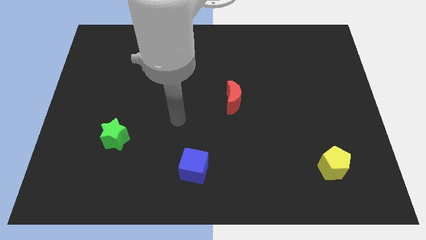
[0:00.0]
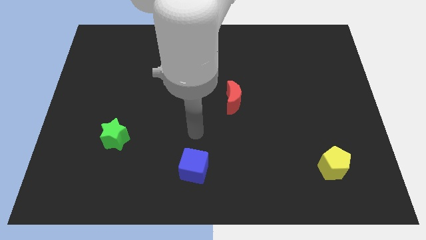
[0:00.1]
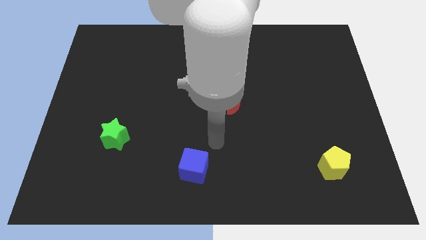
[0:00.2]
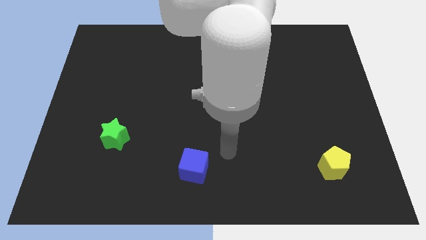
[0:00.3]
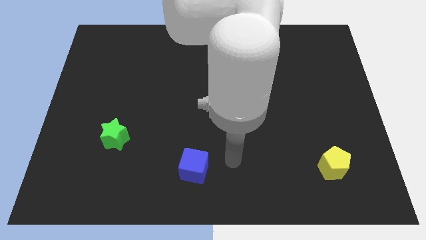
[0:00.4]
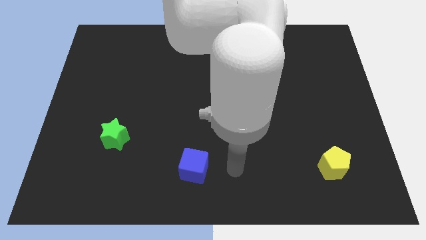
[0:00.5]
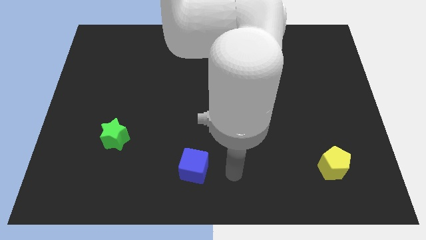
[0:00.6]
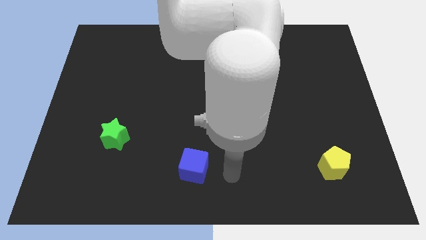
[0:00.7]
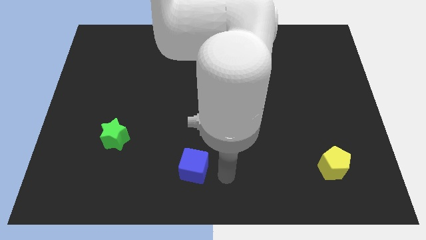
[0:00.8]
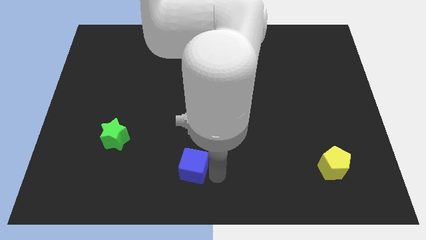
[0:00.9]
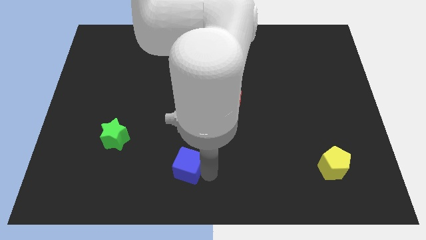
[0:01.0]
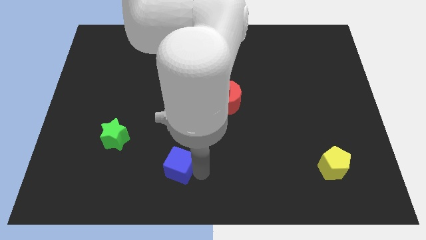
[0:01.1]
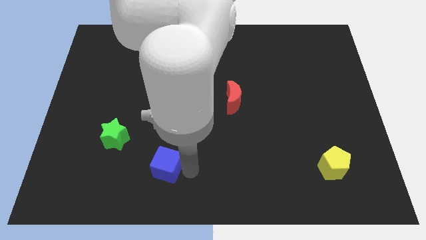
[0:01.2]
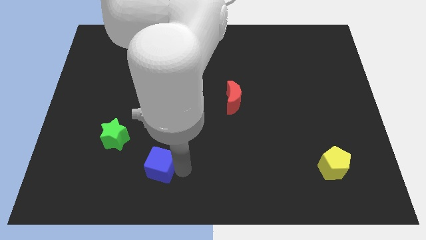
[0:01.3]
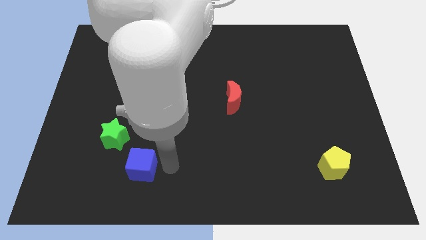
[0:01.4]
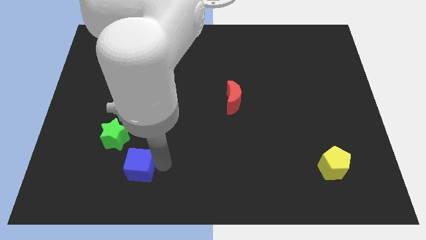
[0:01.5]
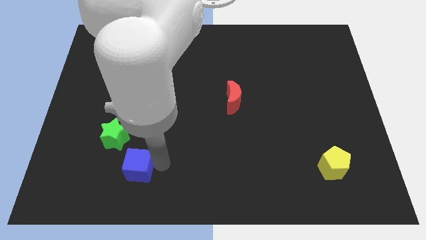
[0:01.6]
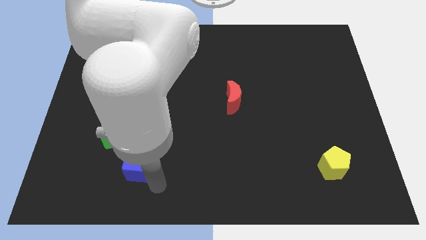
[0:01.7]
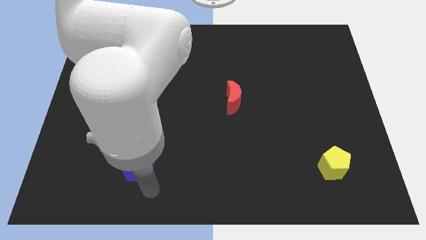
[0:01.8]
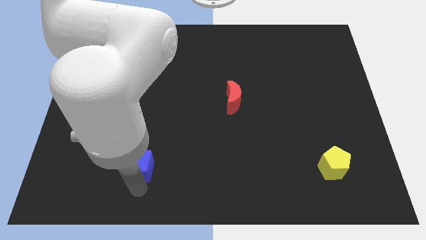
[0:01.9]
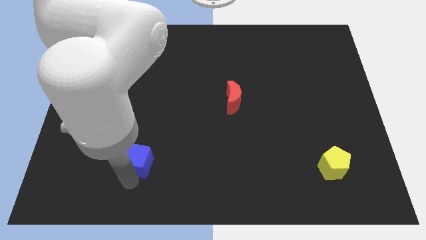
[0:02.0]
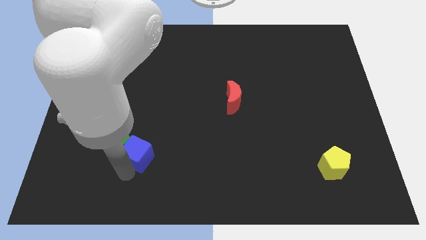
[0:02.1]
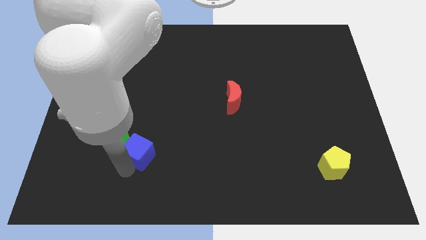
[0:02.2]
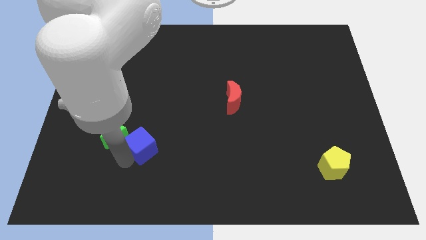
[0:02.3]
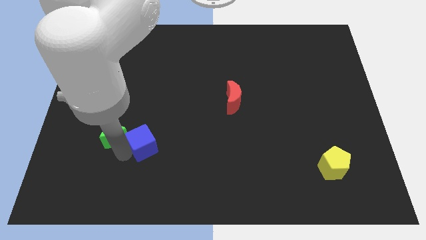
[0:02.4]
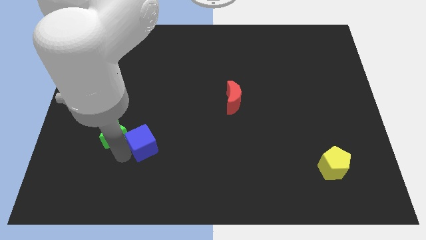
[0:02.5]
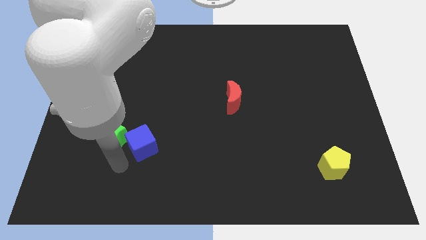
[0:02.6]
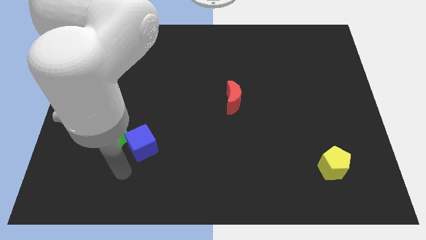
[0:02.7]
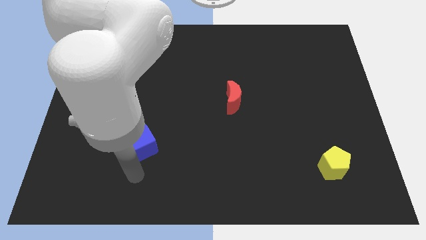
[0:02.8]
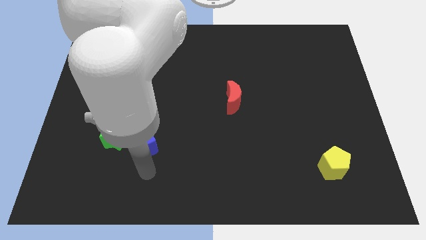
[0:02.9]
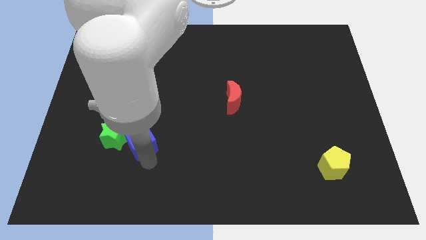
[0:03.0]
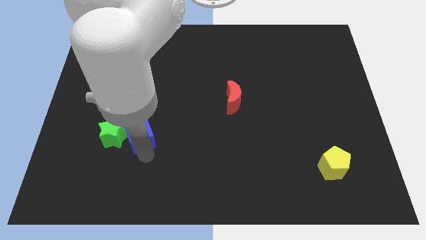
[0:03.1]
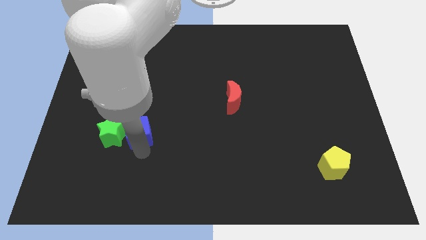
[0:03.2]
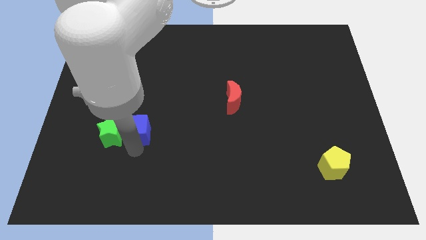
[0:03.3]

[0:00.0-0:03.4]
slide the blue block towards the green block

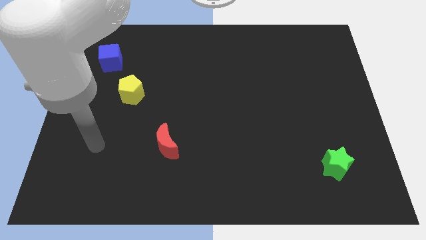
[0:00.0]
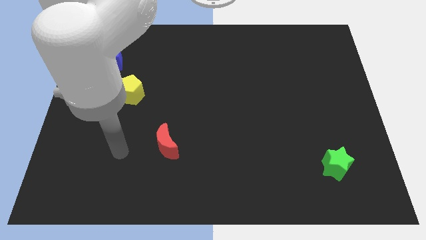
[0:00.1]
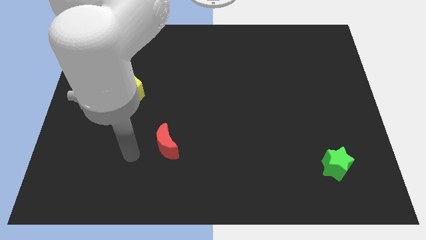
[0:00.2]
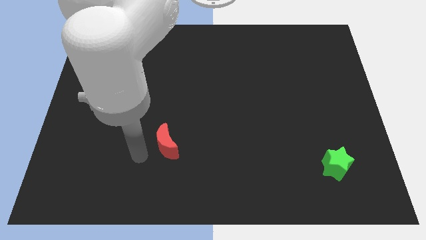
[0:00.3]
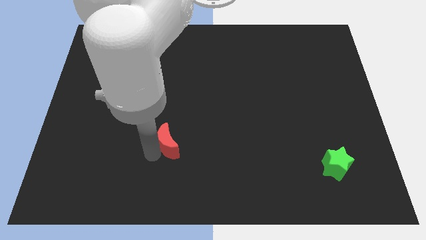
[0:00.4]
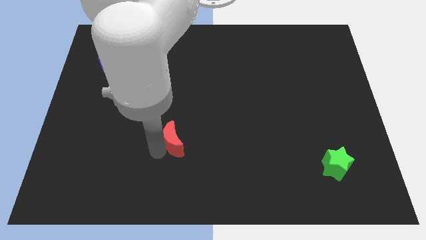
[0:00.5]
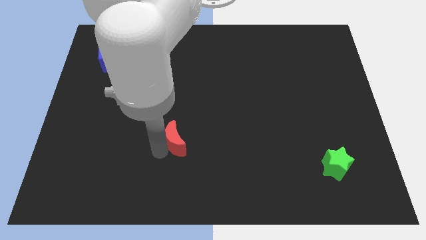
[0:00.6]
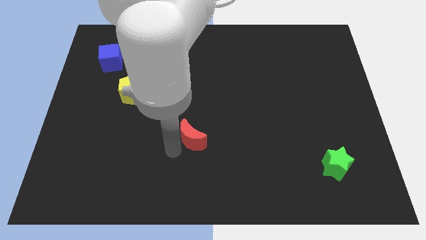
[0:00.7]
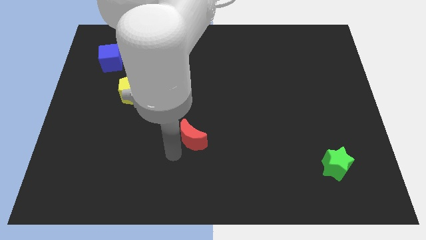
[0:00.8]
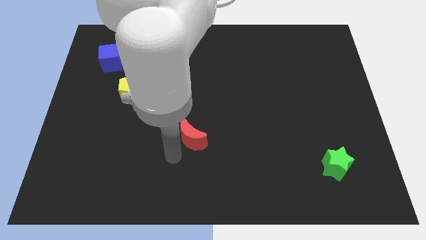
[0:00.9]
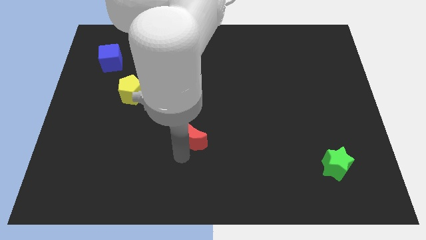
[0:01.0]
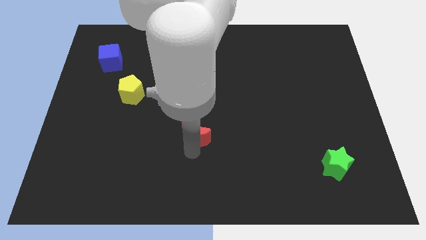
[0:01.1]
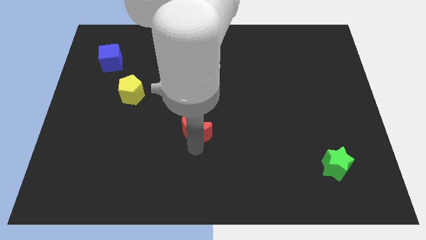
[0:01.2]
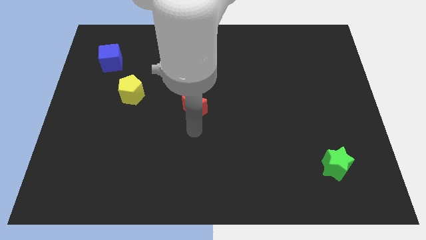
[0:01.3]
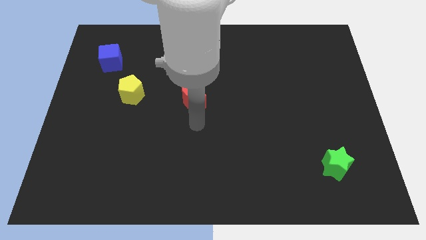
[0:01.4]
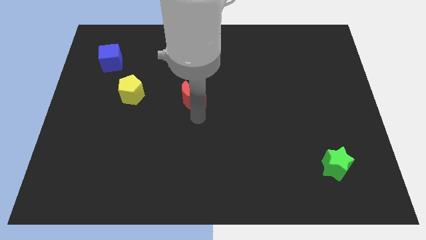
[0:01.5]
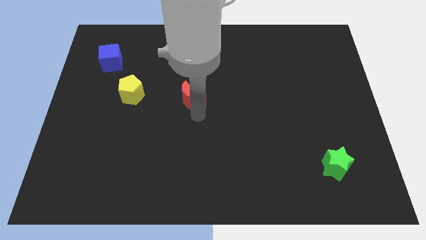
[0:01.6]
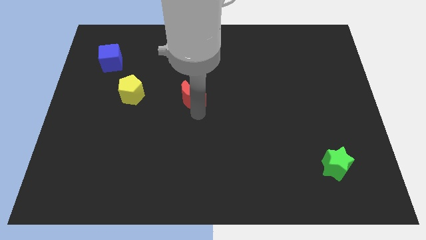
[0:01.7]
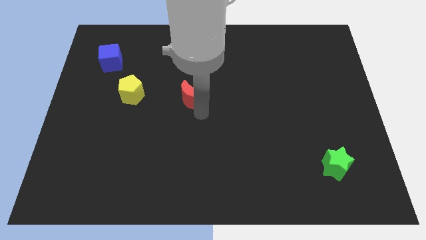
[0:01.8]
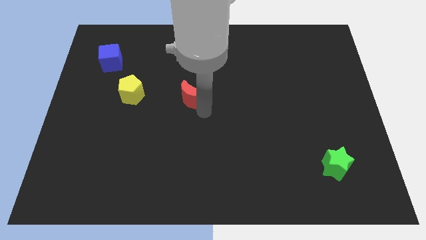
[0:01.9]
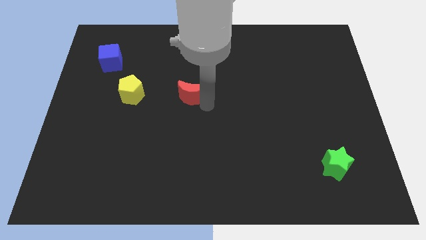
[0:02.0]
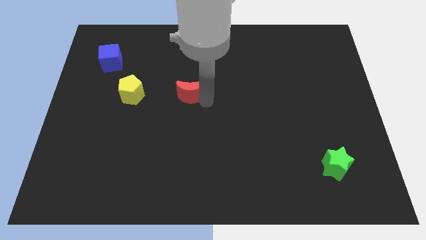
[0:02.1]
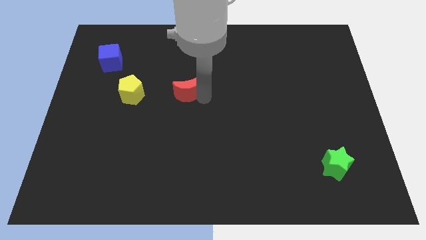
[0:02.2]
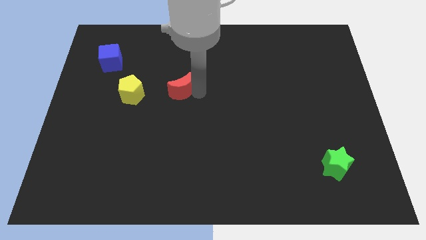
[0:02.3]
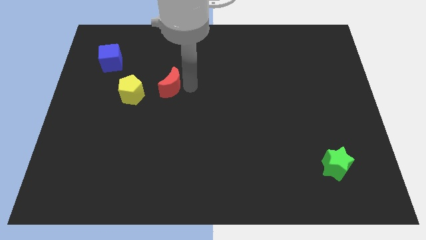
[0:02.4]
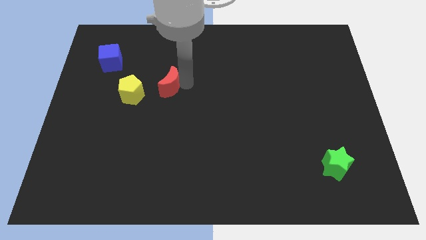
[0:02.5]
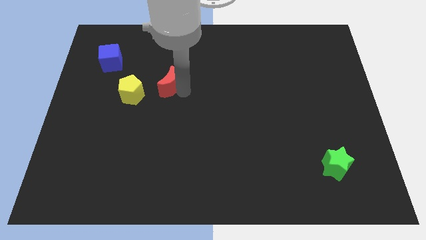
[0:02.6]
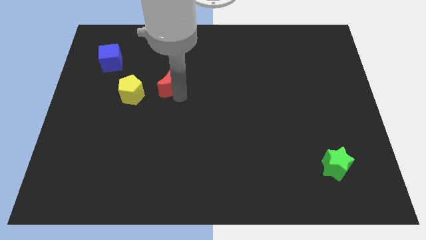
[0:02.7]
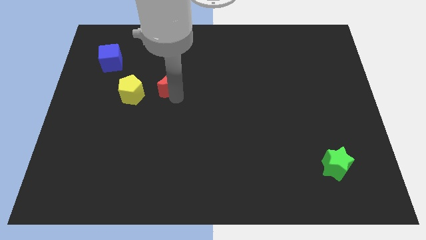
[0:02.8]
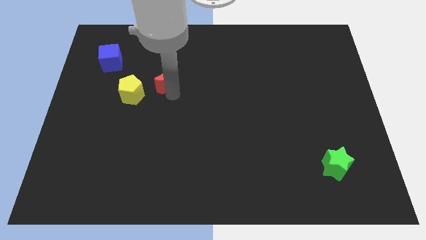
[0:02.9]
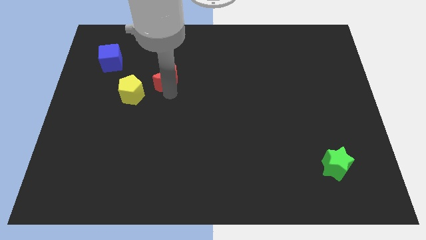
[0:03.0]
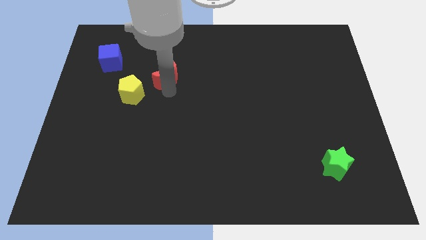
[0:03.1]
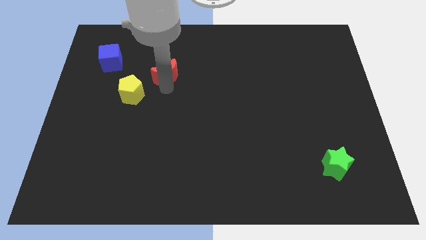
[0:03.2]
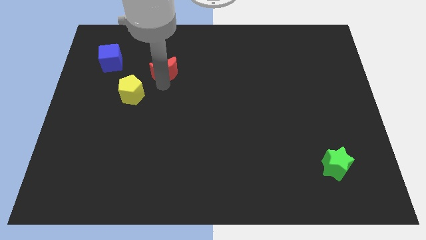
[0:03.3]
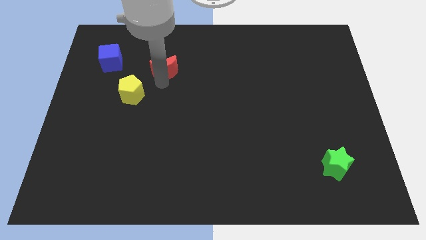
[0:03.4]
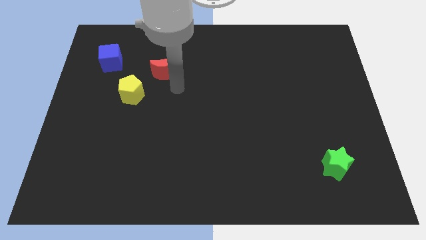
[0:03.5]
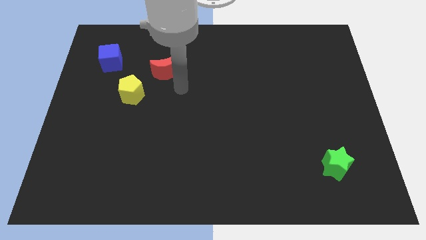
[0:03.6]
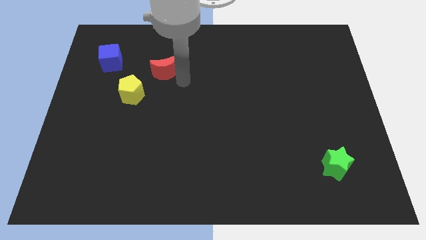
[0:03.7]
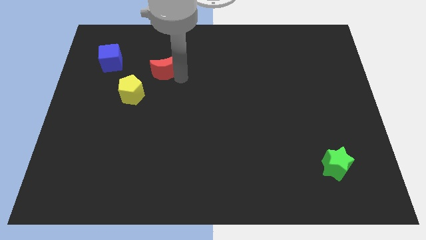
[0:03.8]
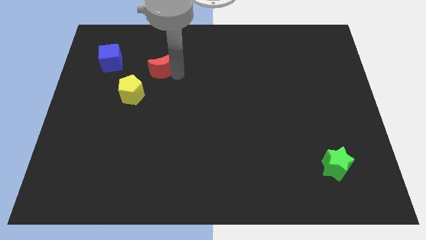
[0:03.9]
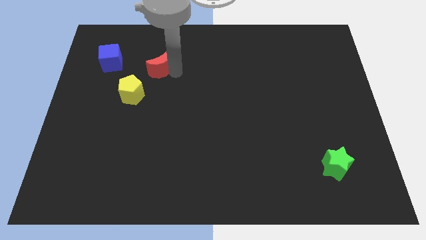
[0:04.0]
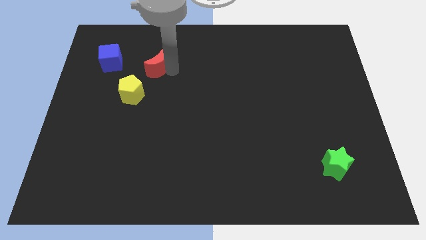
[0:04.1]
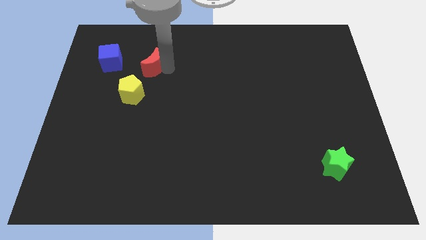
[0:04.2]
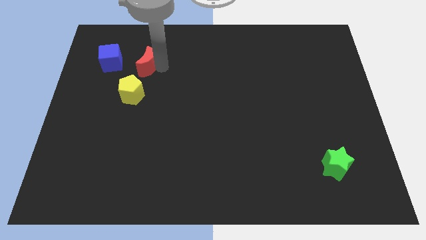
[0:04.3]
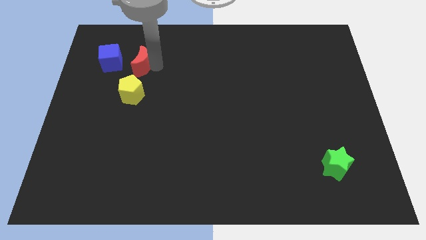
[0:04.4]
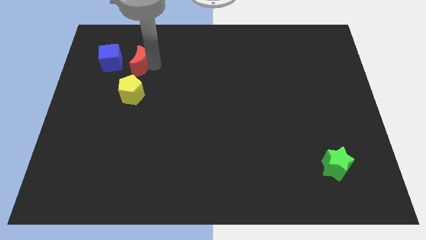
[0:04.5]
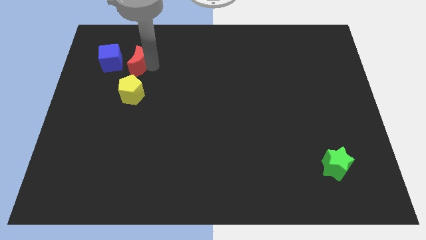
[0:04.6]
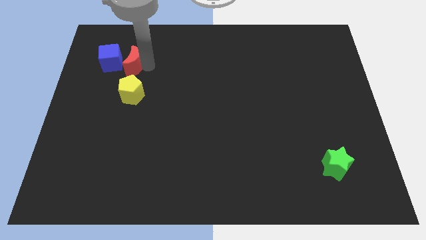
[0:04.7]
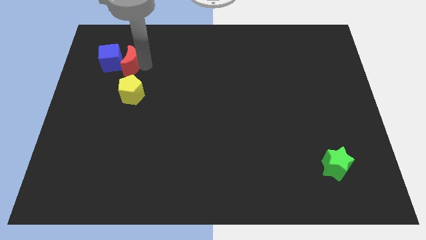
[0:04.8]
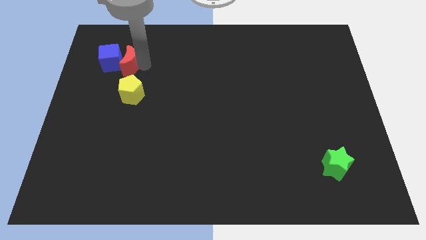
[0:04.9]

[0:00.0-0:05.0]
push the red moon next to the blue cube

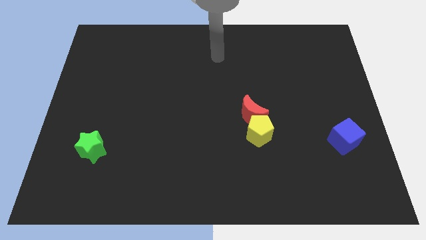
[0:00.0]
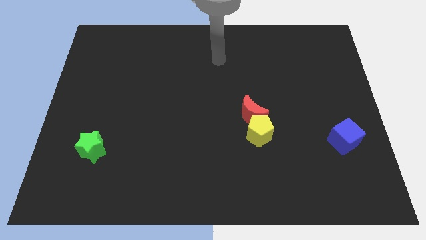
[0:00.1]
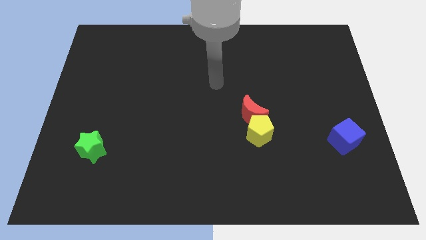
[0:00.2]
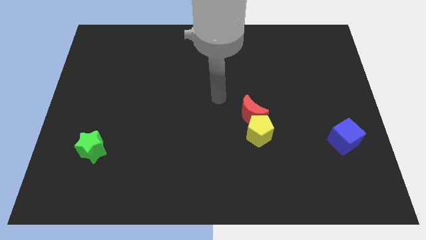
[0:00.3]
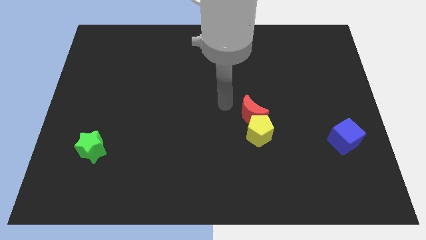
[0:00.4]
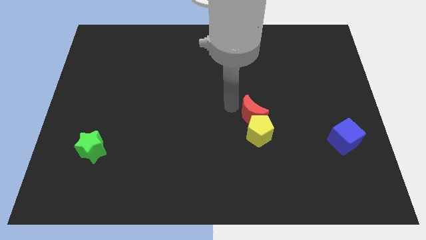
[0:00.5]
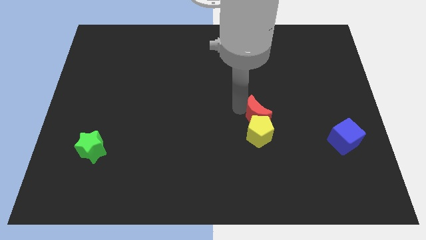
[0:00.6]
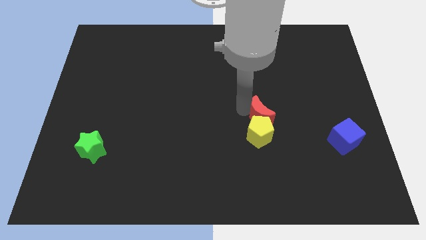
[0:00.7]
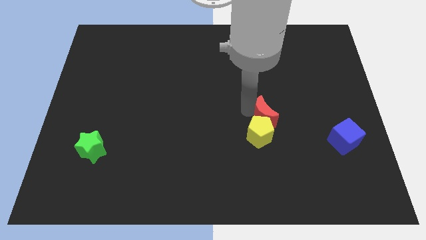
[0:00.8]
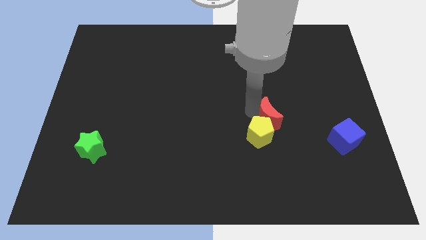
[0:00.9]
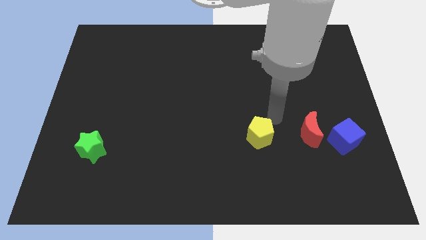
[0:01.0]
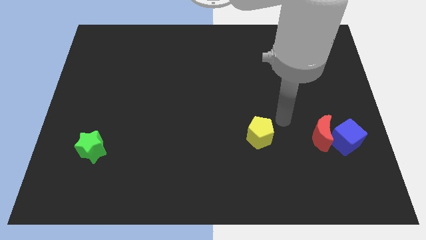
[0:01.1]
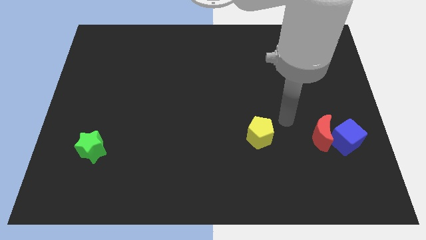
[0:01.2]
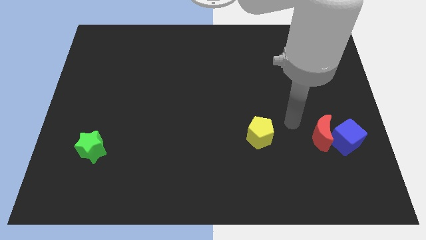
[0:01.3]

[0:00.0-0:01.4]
slide the moon to the blue cube
